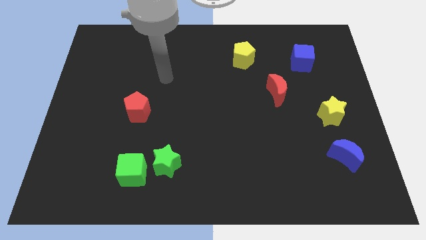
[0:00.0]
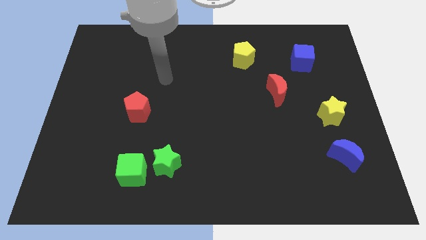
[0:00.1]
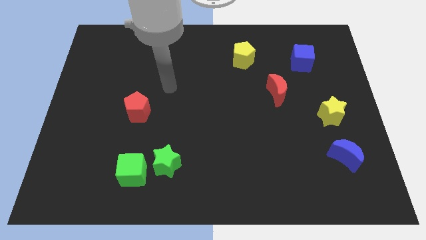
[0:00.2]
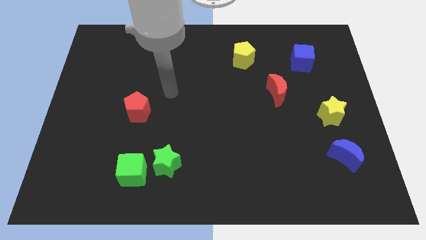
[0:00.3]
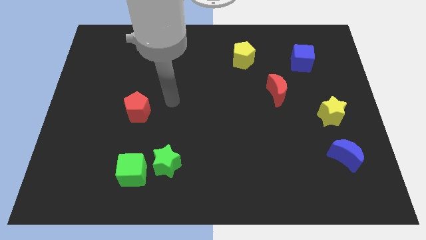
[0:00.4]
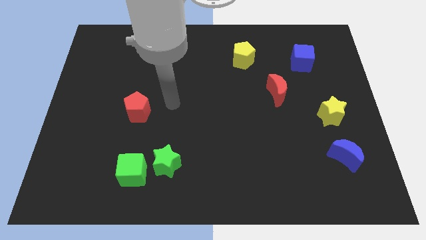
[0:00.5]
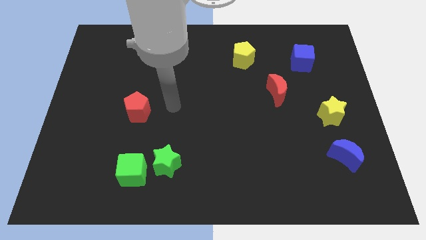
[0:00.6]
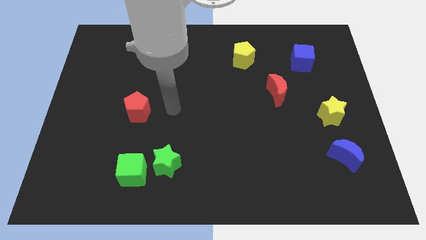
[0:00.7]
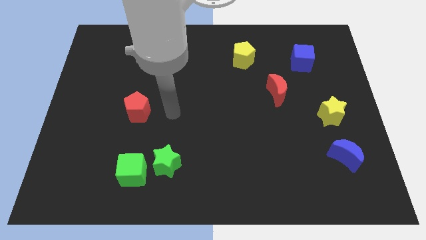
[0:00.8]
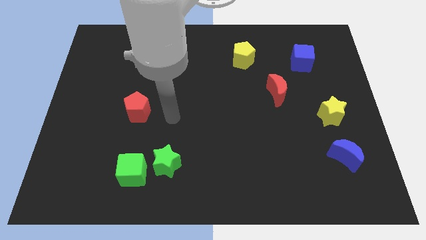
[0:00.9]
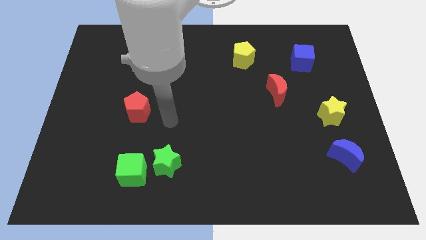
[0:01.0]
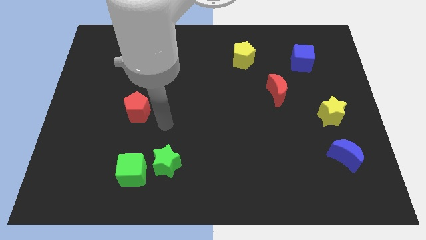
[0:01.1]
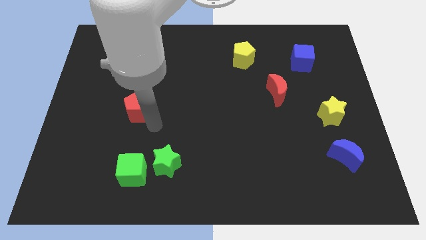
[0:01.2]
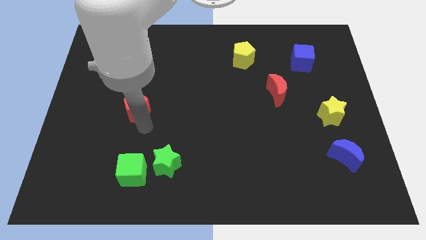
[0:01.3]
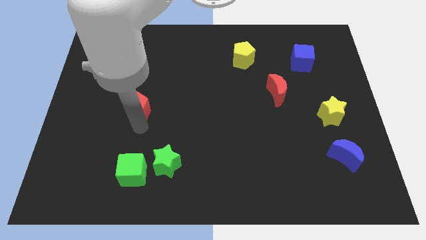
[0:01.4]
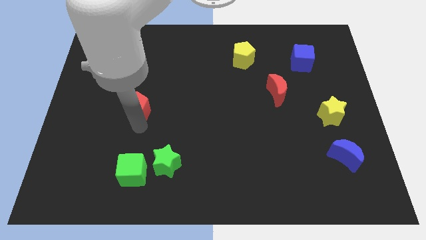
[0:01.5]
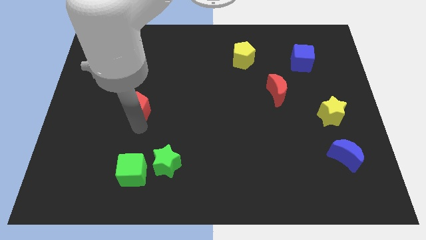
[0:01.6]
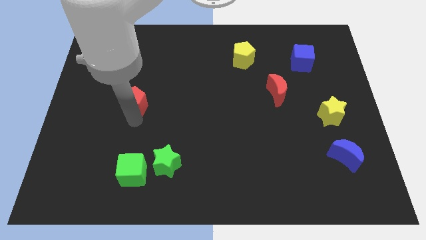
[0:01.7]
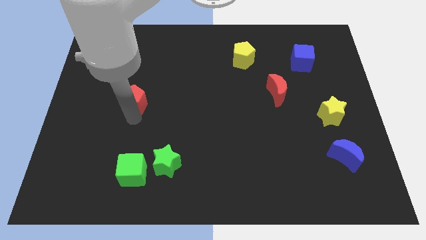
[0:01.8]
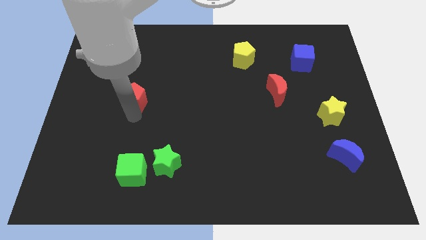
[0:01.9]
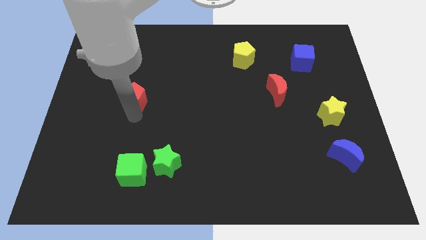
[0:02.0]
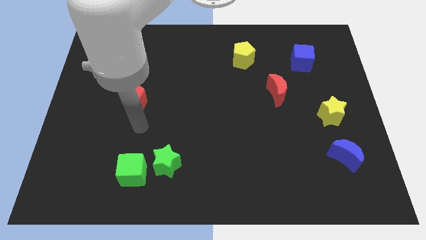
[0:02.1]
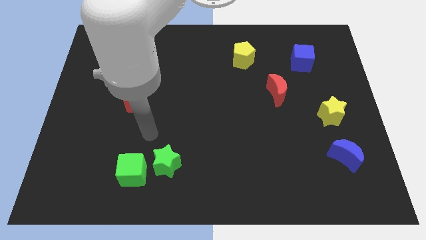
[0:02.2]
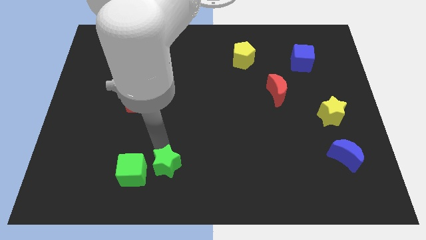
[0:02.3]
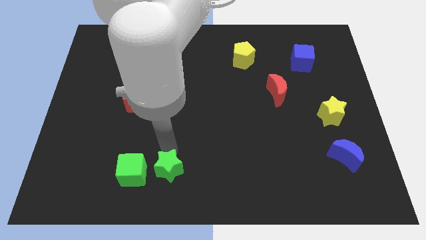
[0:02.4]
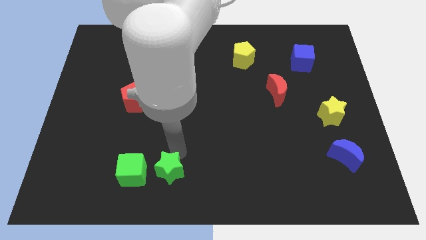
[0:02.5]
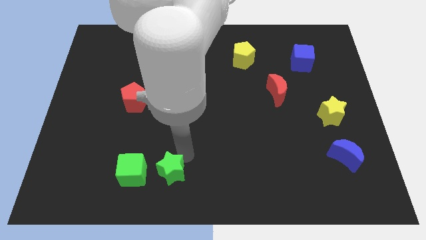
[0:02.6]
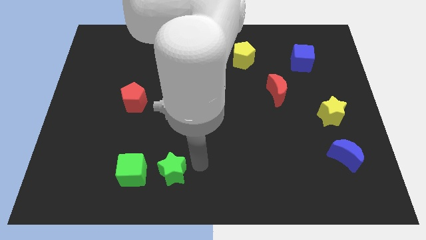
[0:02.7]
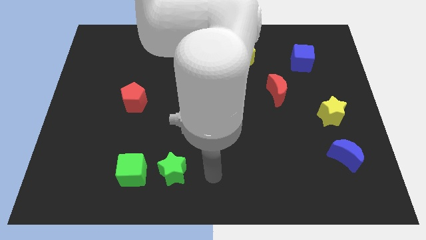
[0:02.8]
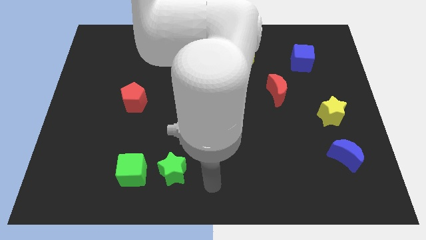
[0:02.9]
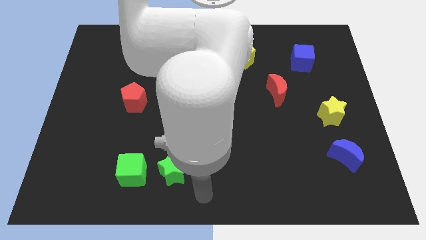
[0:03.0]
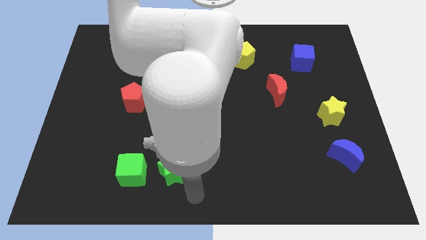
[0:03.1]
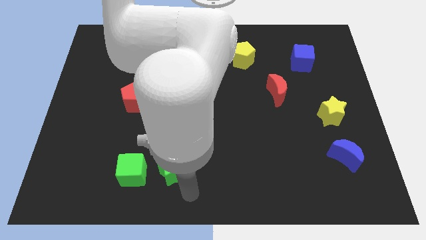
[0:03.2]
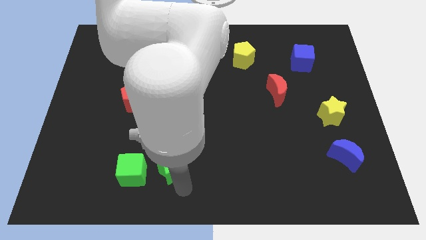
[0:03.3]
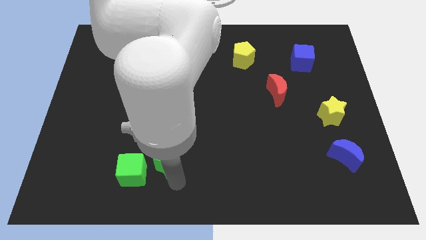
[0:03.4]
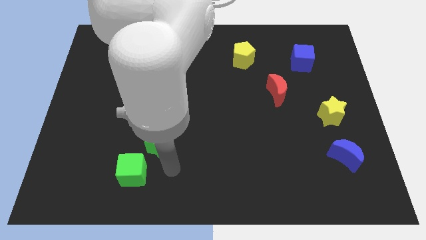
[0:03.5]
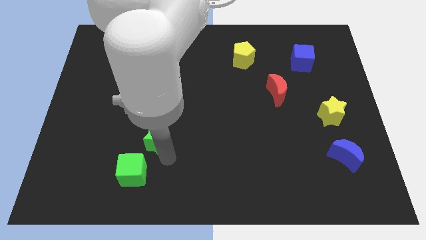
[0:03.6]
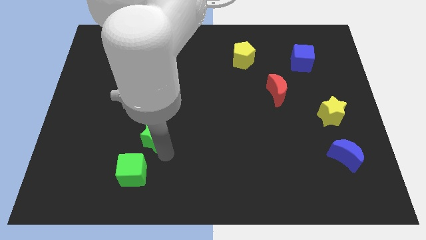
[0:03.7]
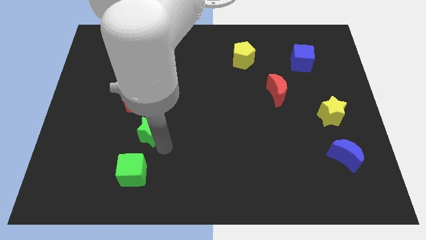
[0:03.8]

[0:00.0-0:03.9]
move the green star towards the bottom side of the red pentagon

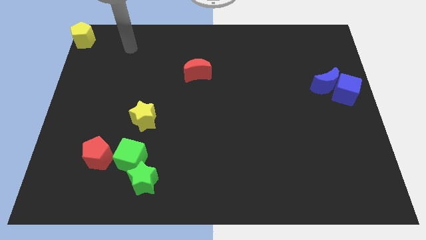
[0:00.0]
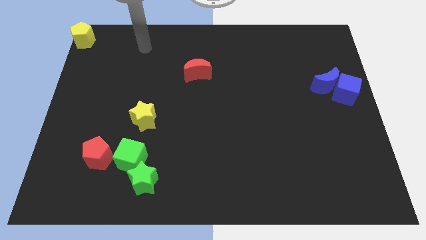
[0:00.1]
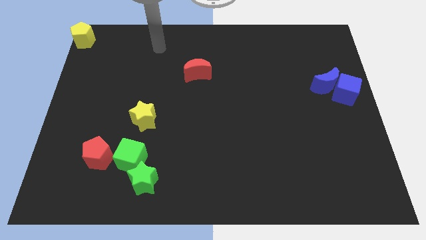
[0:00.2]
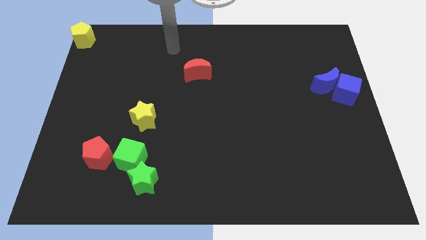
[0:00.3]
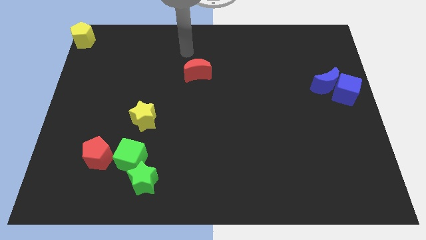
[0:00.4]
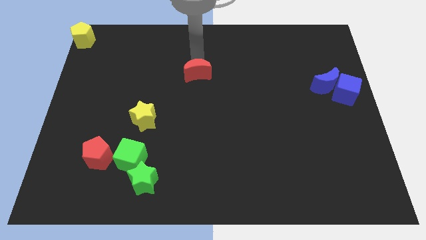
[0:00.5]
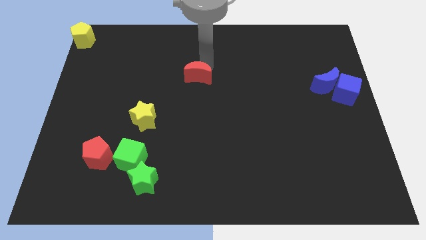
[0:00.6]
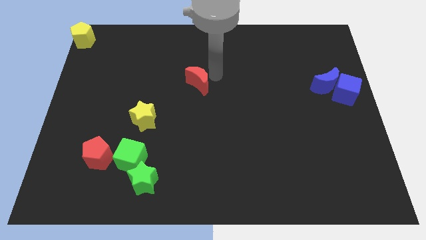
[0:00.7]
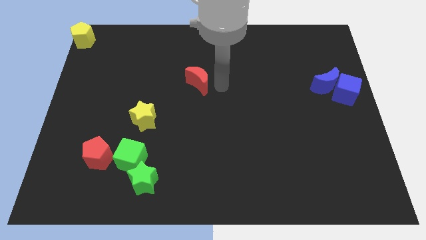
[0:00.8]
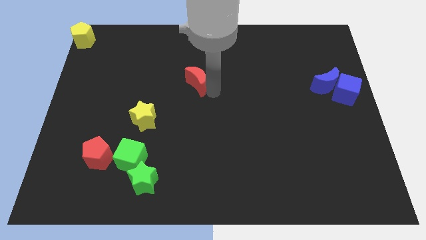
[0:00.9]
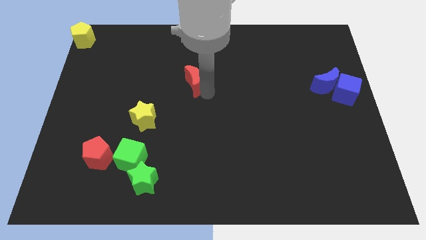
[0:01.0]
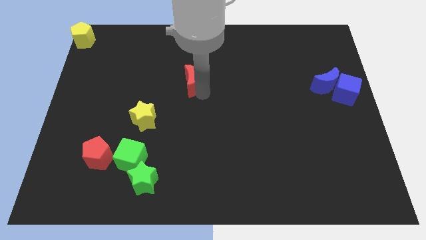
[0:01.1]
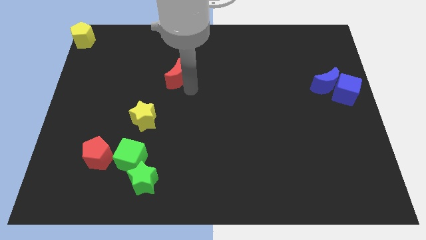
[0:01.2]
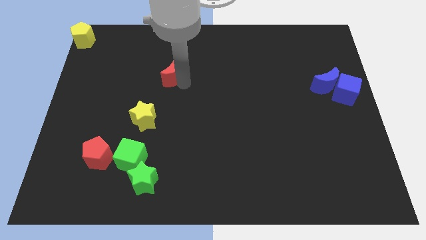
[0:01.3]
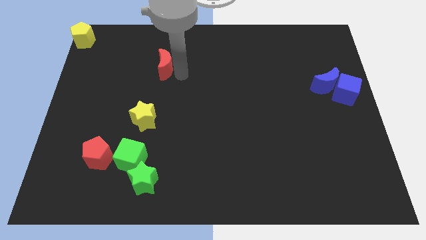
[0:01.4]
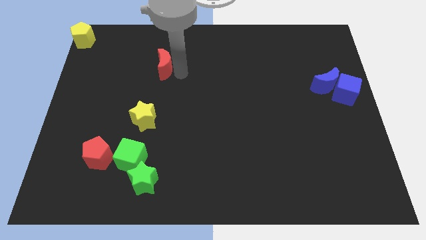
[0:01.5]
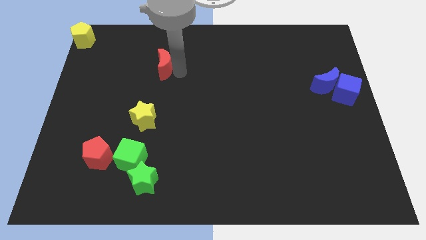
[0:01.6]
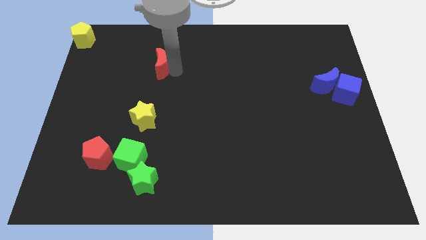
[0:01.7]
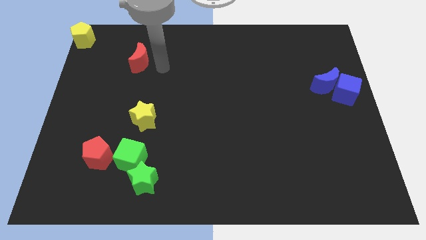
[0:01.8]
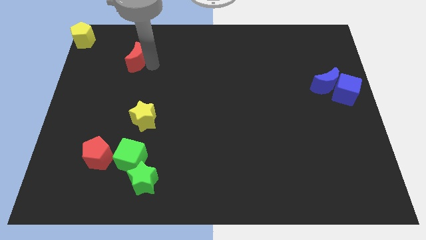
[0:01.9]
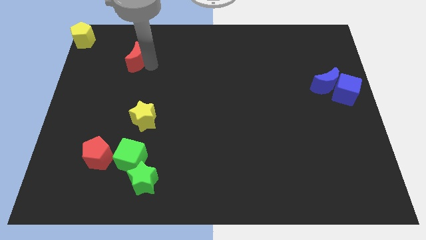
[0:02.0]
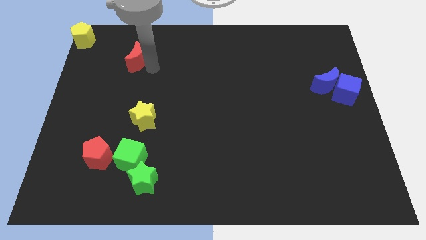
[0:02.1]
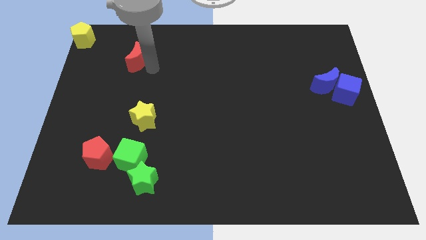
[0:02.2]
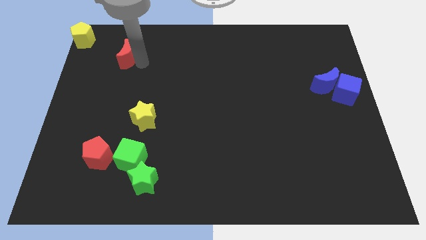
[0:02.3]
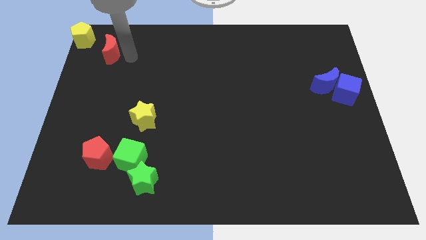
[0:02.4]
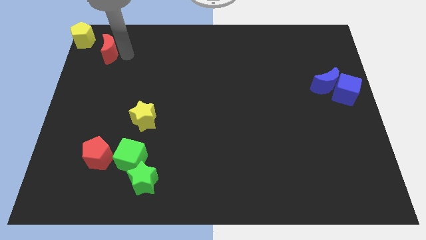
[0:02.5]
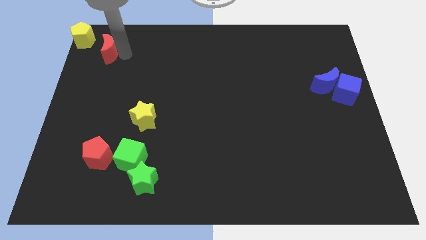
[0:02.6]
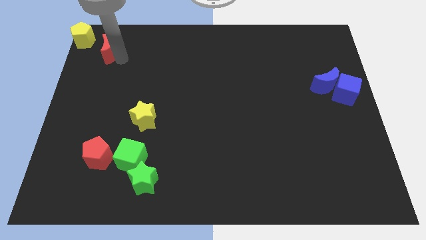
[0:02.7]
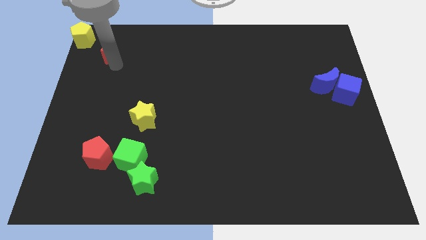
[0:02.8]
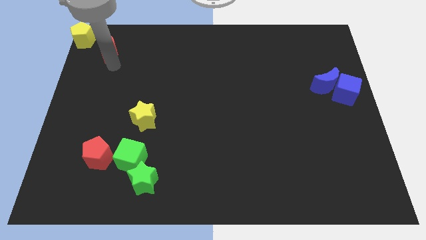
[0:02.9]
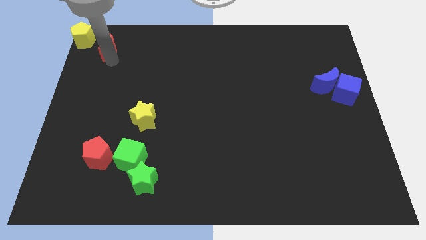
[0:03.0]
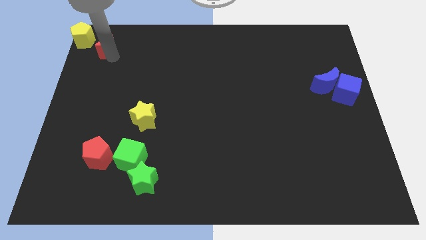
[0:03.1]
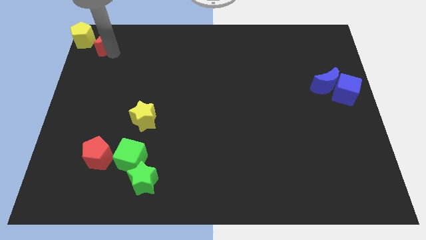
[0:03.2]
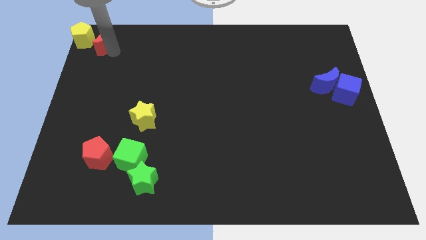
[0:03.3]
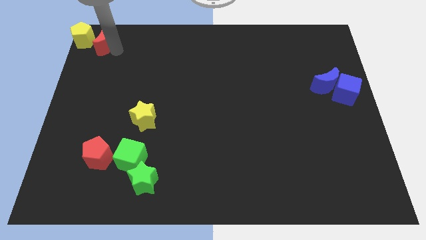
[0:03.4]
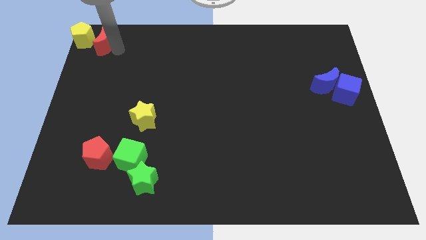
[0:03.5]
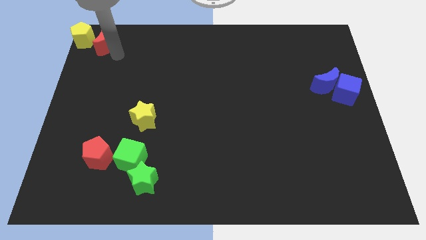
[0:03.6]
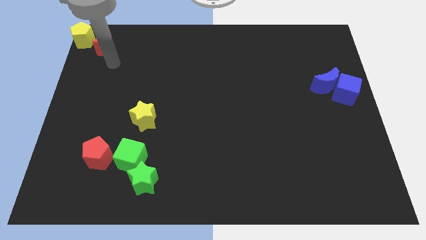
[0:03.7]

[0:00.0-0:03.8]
slide the red crescent towards the yellow pentagon at the top left corner

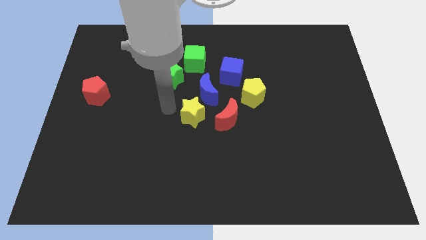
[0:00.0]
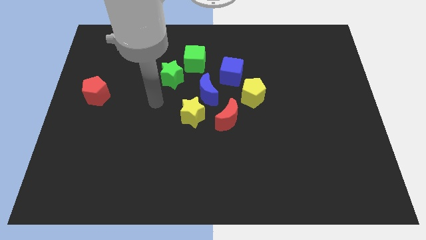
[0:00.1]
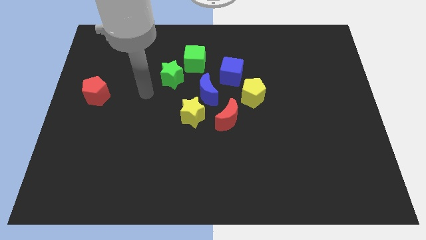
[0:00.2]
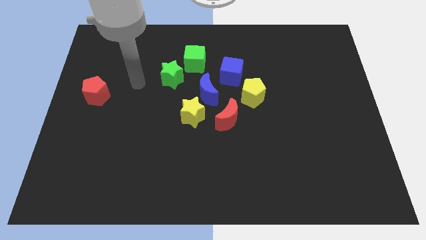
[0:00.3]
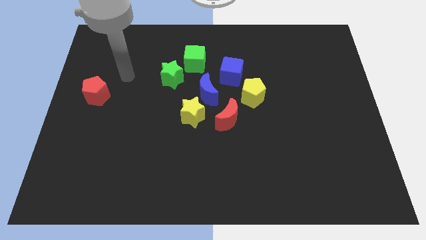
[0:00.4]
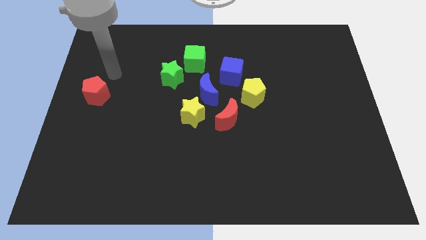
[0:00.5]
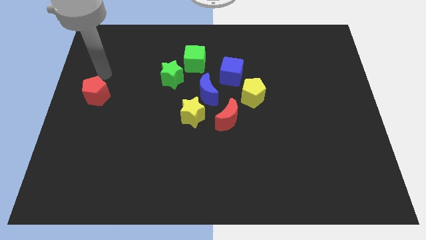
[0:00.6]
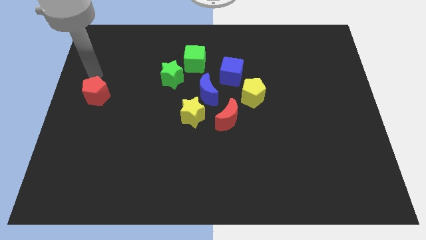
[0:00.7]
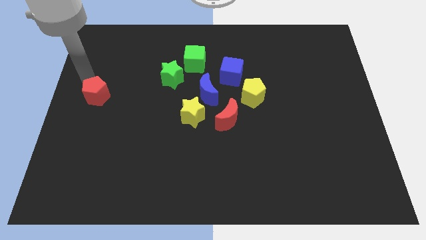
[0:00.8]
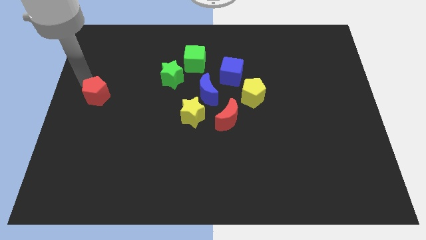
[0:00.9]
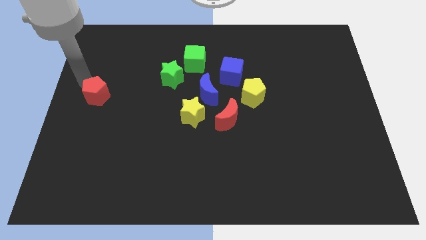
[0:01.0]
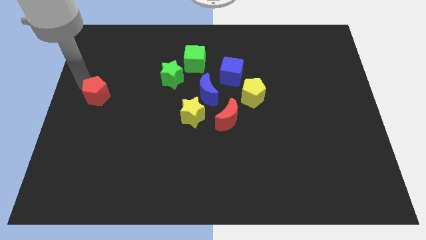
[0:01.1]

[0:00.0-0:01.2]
place the arm near the red pentagon

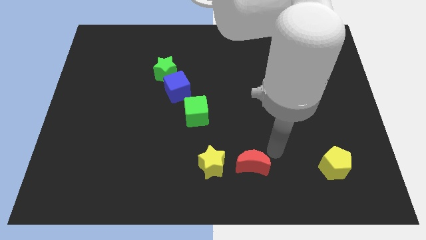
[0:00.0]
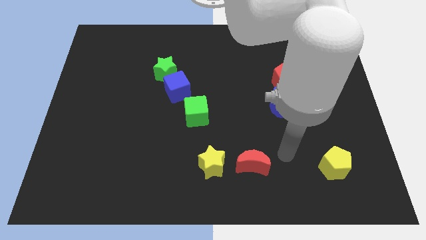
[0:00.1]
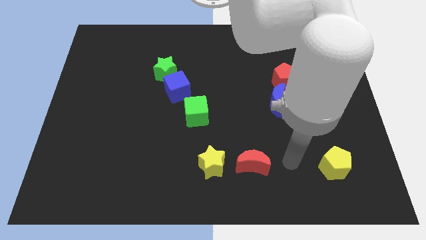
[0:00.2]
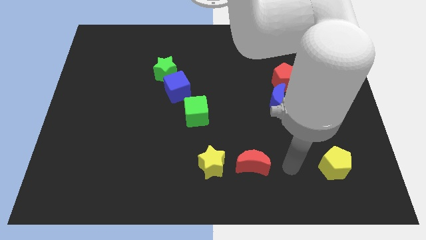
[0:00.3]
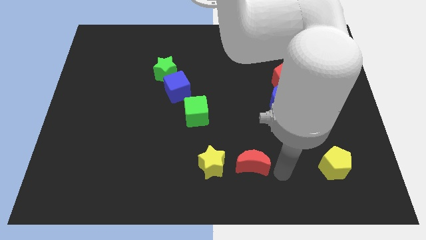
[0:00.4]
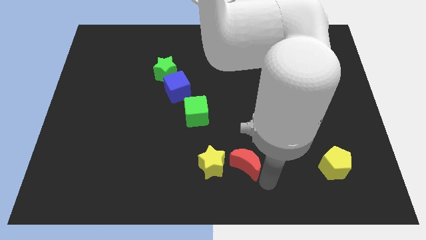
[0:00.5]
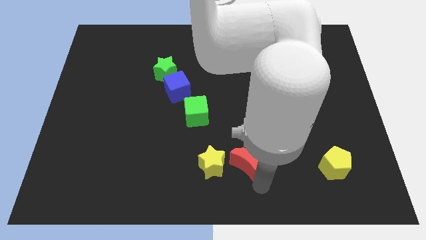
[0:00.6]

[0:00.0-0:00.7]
touch the bottom right side of the red moon
